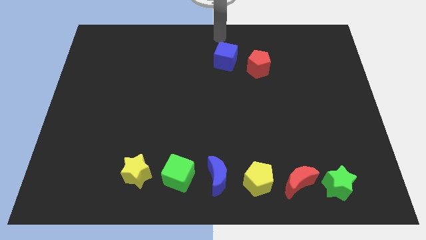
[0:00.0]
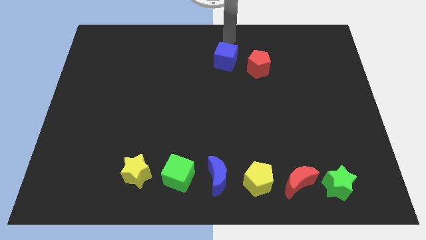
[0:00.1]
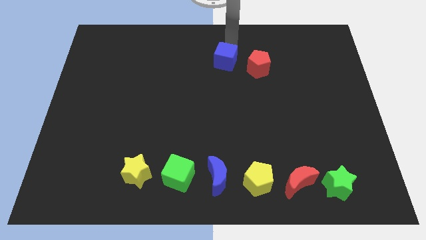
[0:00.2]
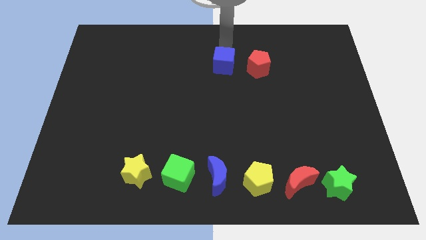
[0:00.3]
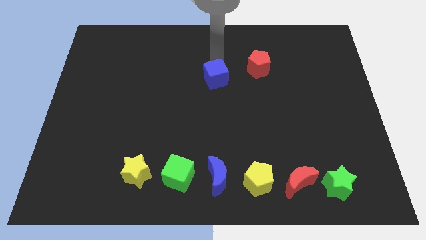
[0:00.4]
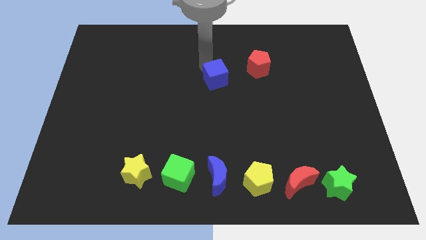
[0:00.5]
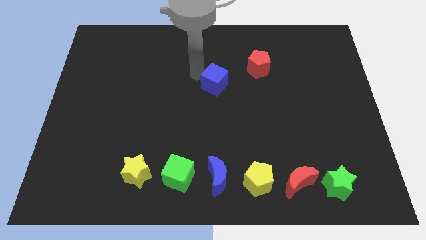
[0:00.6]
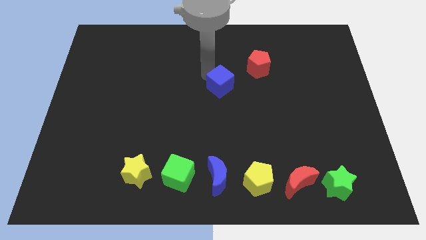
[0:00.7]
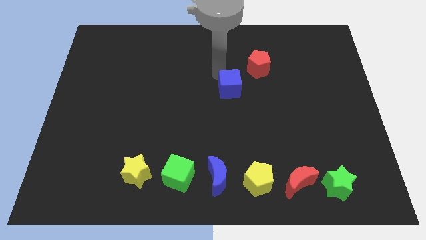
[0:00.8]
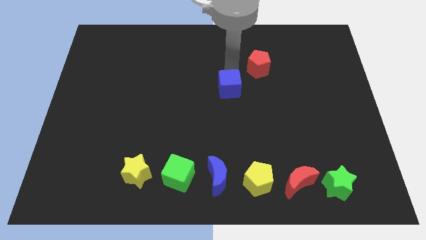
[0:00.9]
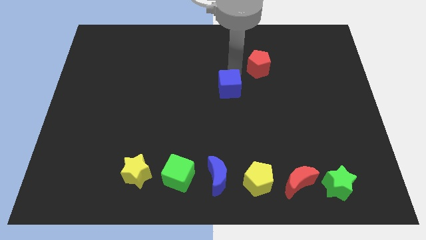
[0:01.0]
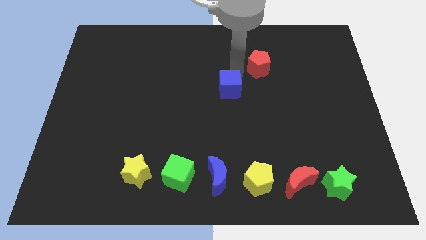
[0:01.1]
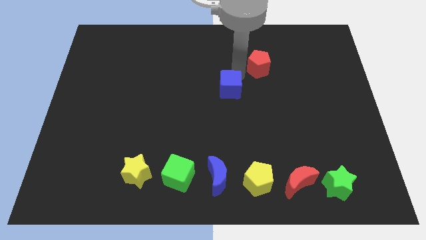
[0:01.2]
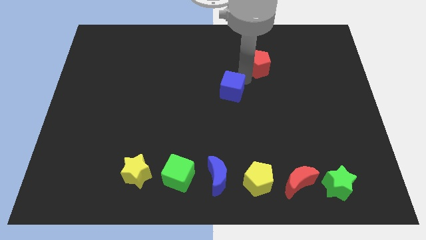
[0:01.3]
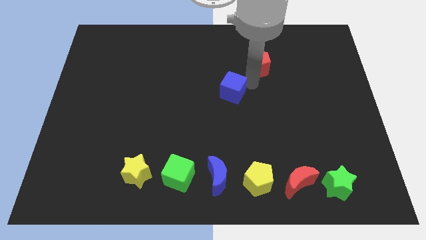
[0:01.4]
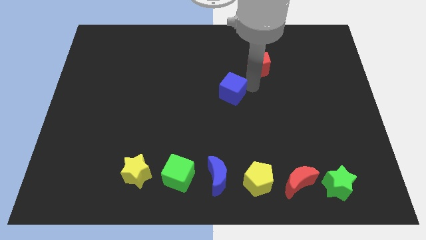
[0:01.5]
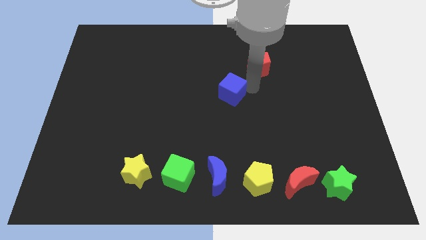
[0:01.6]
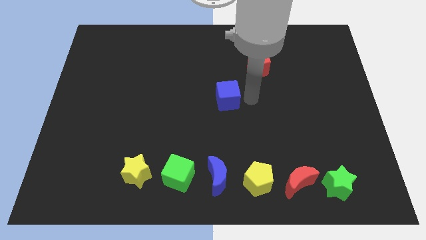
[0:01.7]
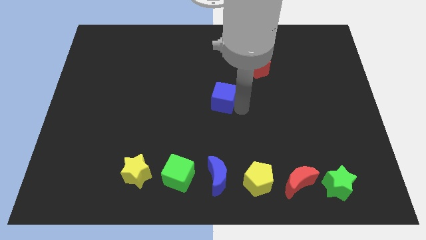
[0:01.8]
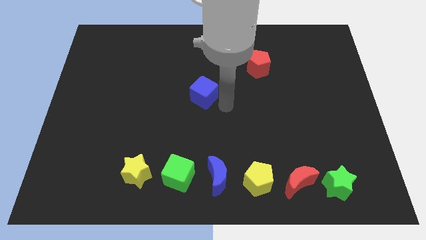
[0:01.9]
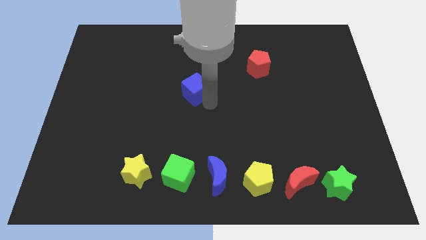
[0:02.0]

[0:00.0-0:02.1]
push the blue cube towards the center

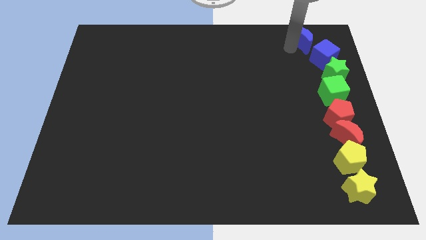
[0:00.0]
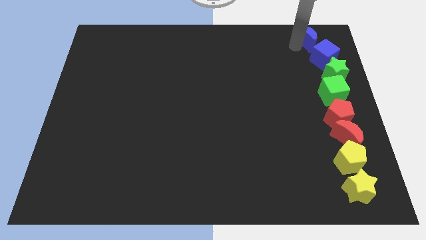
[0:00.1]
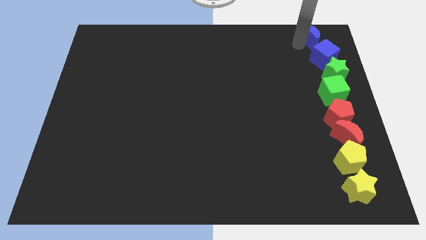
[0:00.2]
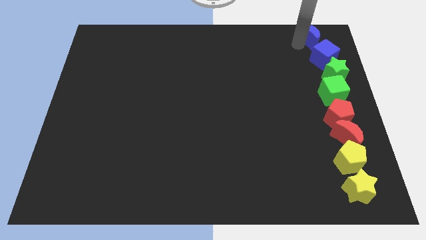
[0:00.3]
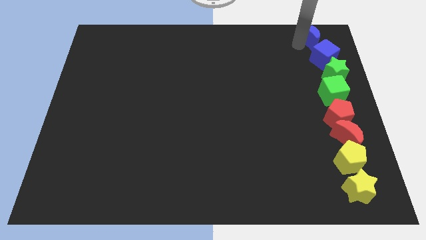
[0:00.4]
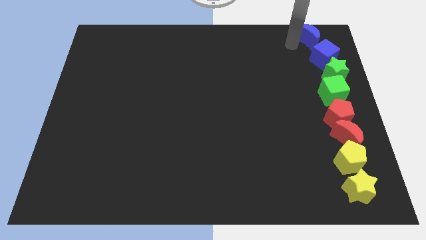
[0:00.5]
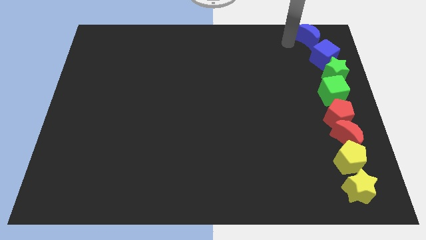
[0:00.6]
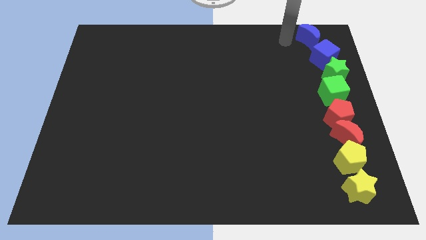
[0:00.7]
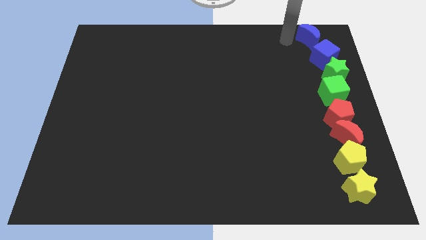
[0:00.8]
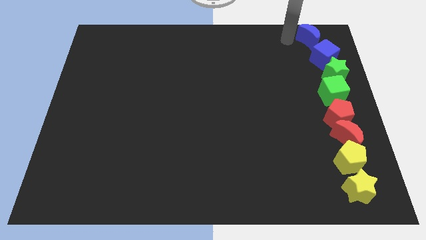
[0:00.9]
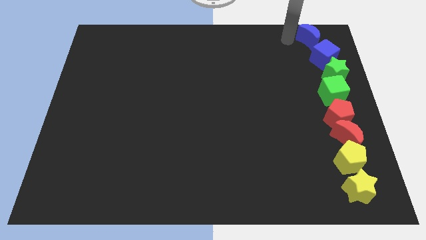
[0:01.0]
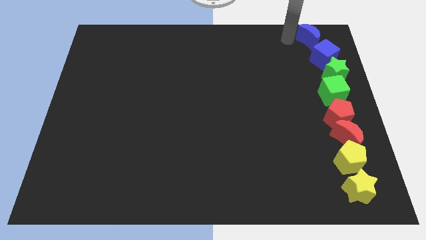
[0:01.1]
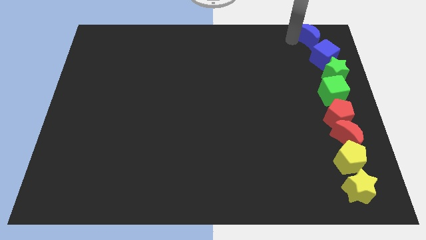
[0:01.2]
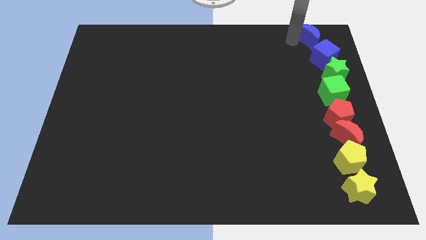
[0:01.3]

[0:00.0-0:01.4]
place the blue crescent to the top of the blue cube

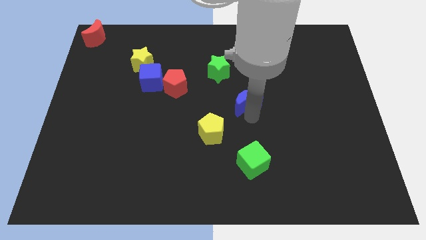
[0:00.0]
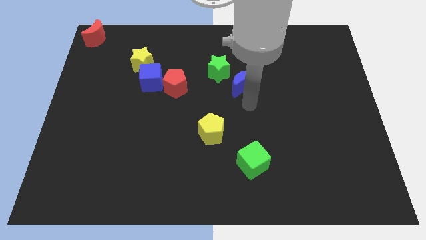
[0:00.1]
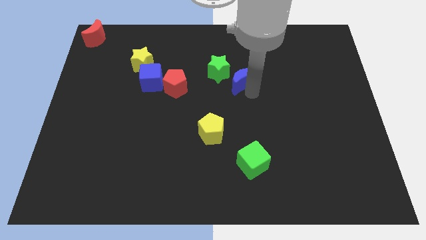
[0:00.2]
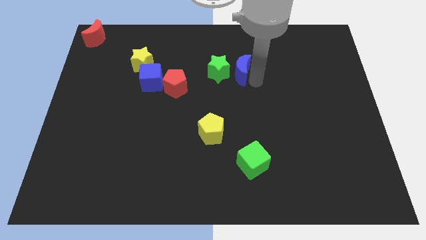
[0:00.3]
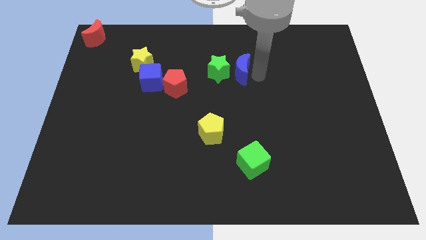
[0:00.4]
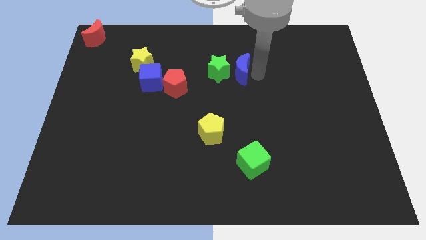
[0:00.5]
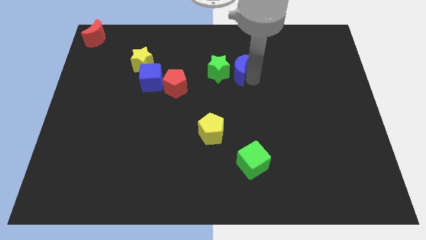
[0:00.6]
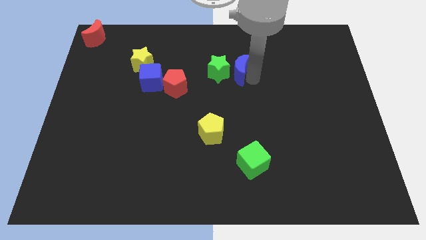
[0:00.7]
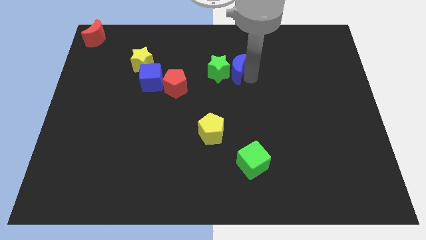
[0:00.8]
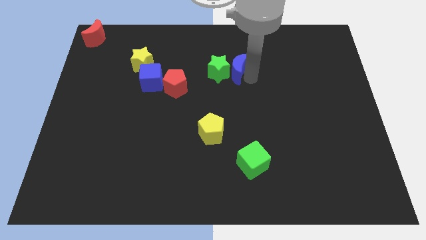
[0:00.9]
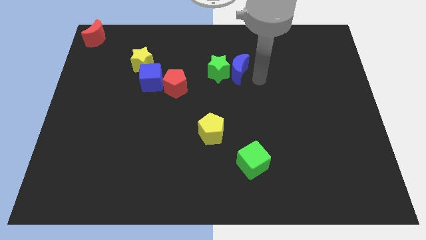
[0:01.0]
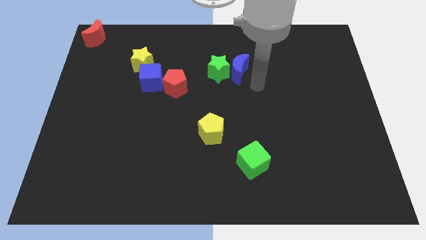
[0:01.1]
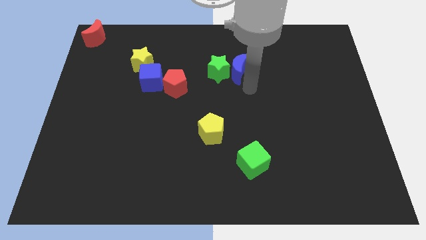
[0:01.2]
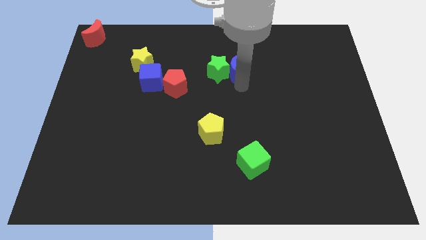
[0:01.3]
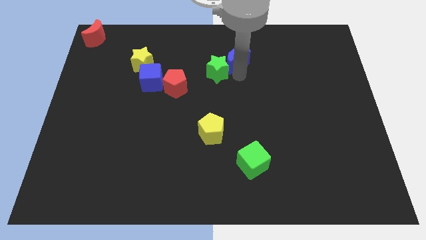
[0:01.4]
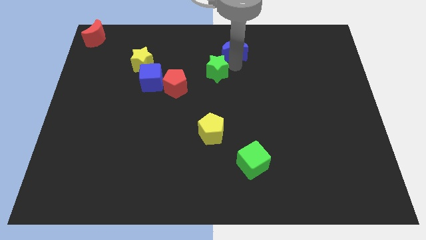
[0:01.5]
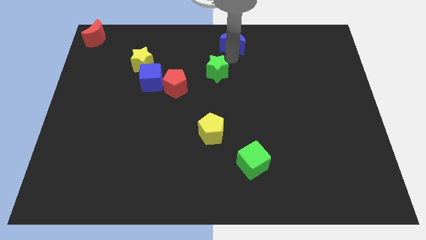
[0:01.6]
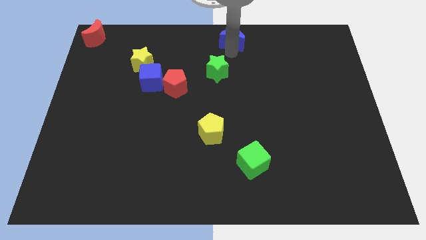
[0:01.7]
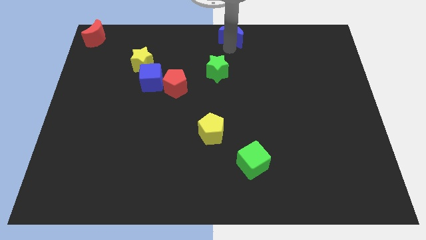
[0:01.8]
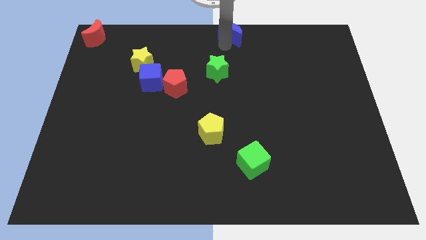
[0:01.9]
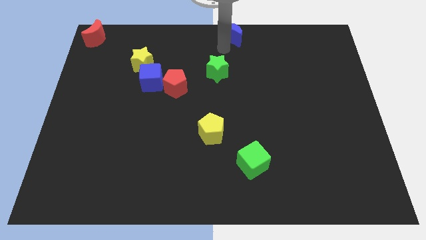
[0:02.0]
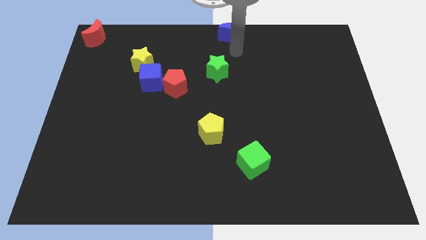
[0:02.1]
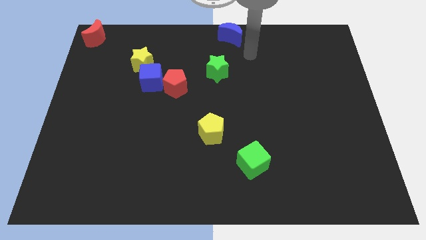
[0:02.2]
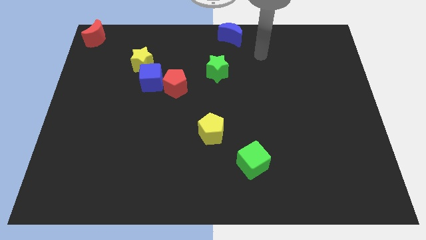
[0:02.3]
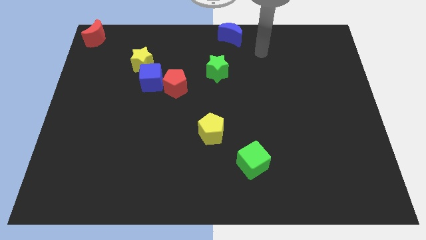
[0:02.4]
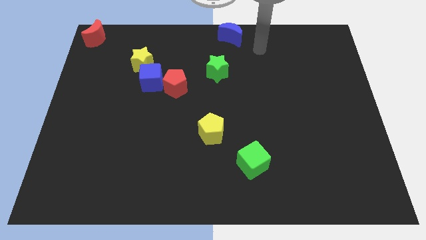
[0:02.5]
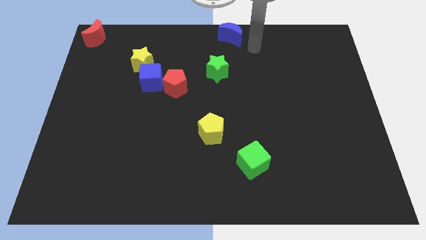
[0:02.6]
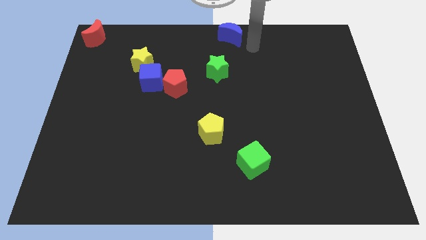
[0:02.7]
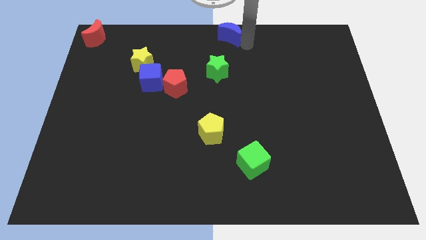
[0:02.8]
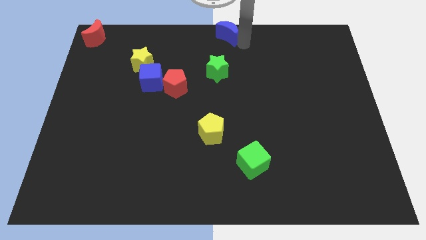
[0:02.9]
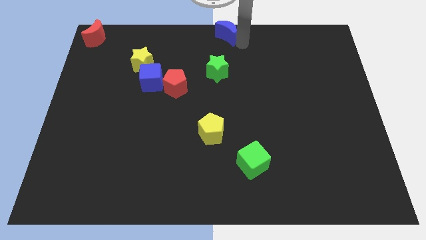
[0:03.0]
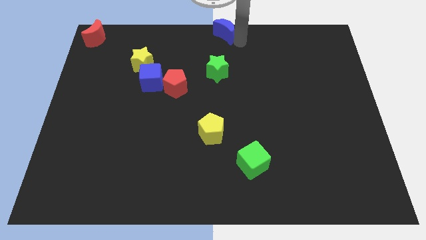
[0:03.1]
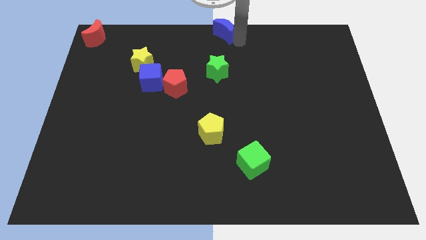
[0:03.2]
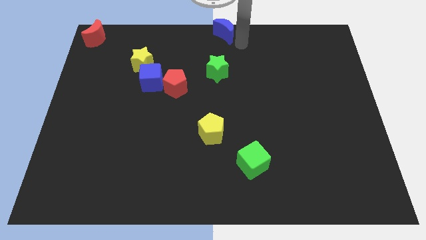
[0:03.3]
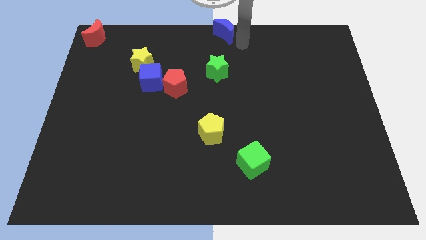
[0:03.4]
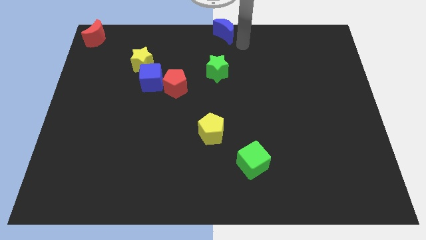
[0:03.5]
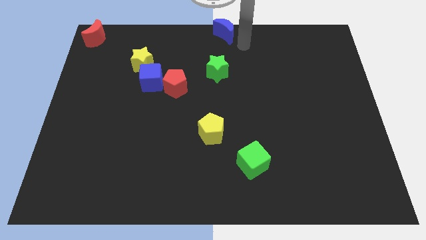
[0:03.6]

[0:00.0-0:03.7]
push blue crescent above green star

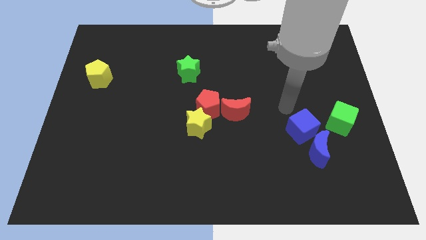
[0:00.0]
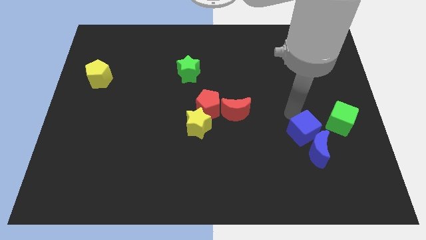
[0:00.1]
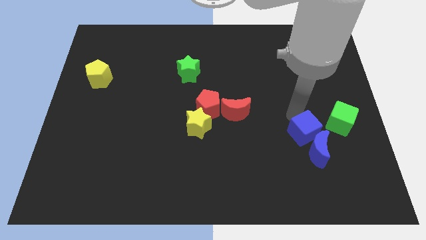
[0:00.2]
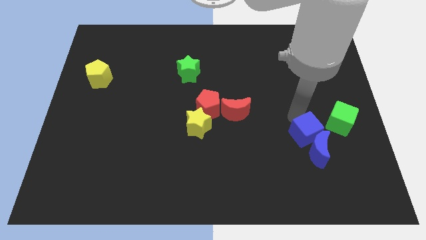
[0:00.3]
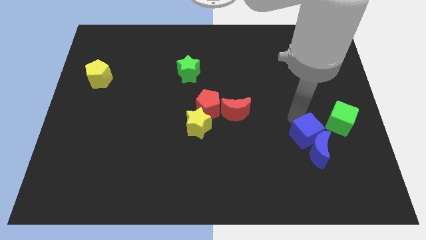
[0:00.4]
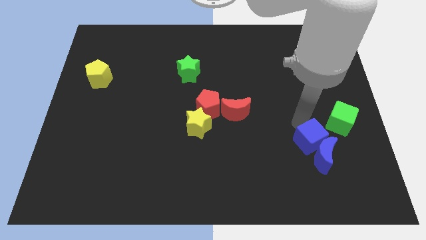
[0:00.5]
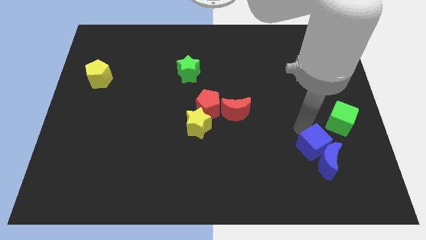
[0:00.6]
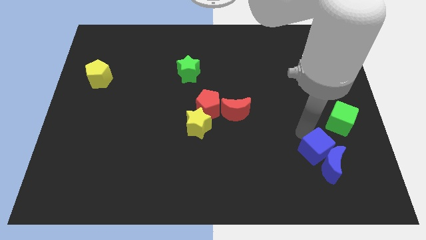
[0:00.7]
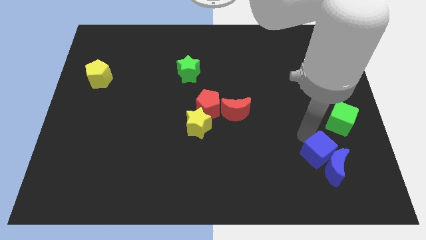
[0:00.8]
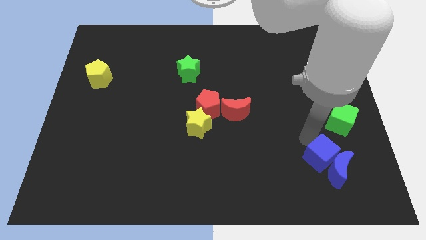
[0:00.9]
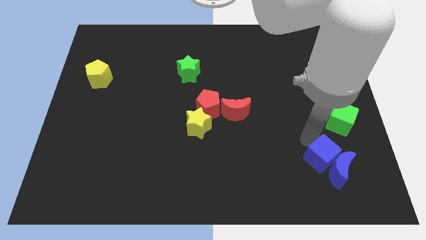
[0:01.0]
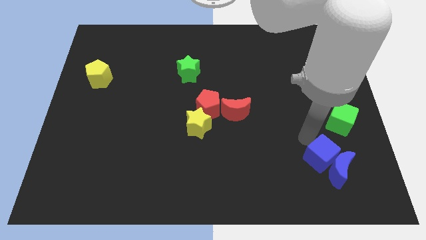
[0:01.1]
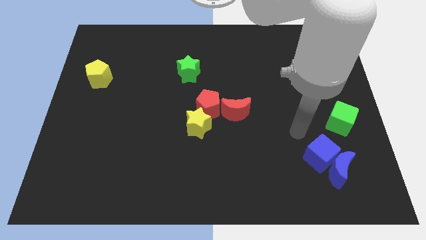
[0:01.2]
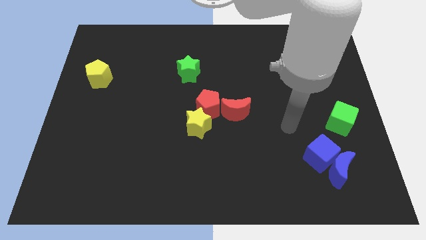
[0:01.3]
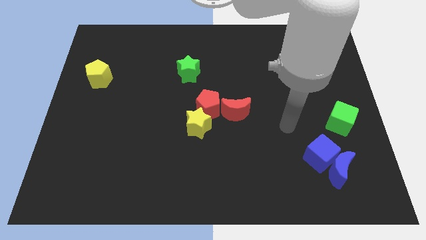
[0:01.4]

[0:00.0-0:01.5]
push the blue blocks towards the bottom right corner of the board

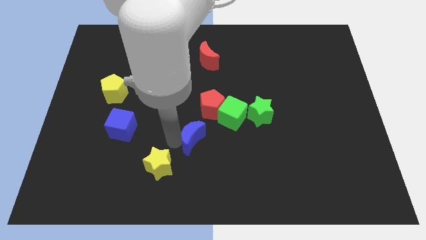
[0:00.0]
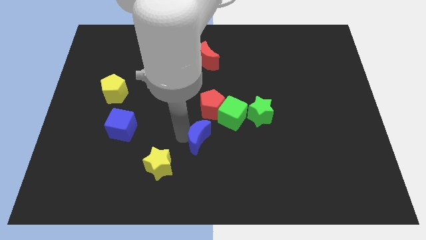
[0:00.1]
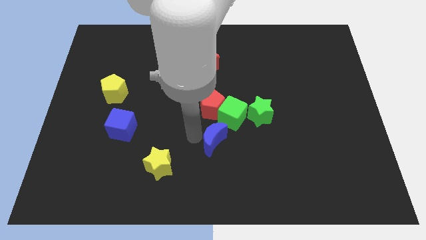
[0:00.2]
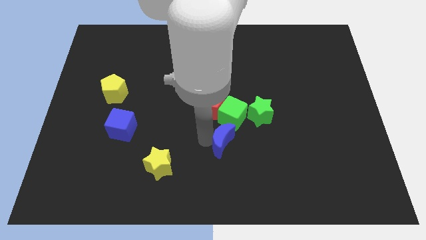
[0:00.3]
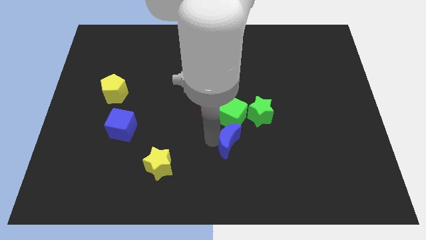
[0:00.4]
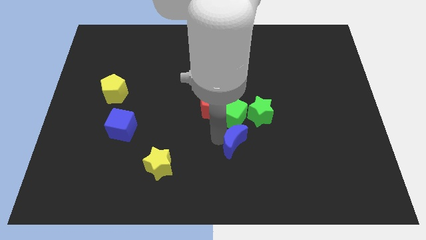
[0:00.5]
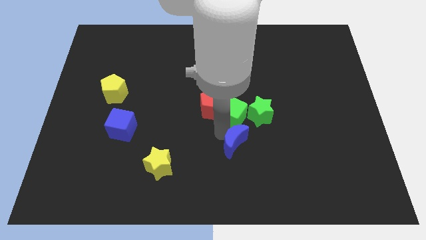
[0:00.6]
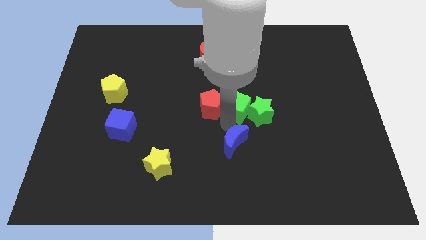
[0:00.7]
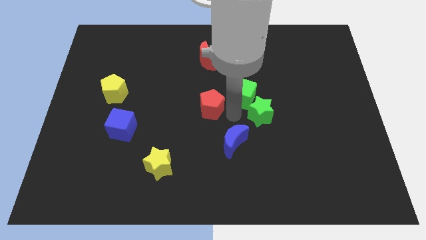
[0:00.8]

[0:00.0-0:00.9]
place the blue crescent below the green cube
